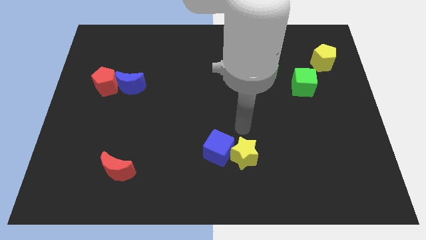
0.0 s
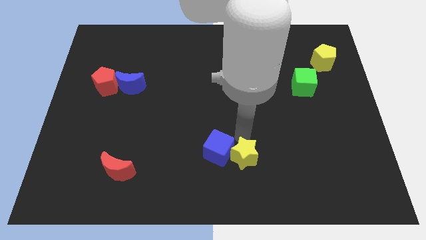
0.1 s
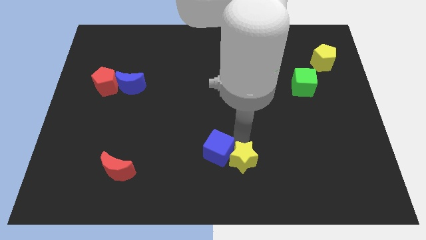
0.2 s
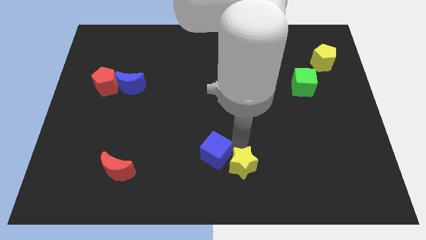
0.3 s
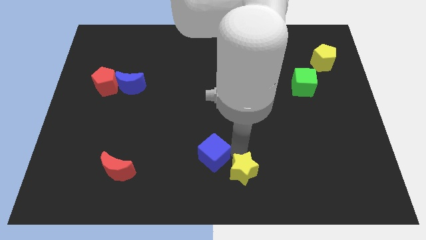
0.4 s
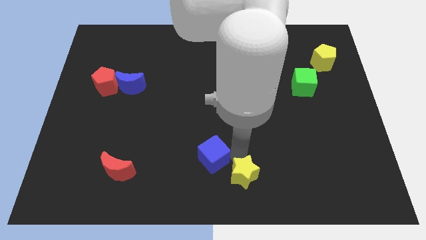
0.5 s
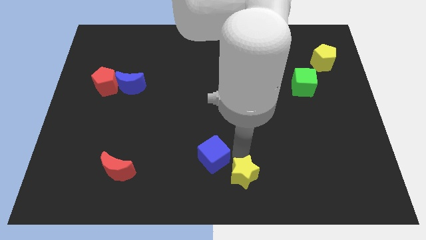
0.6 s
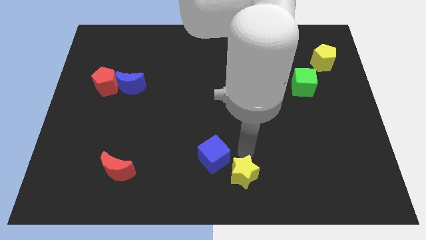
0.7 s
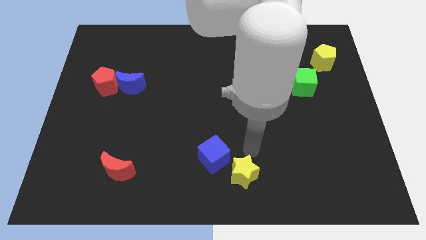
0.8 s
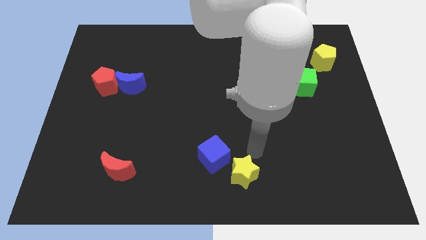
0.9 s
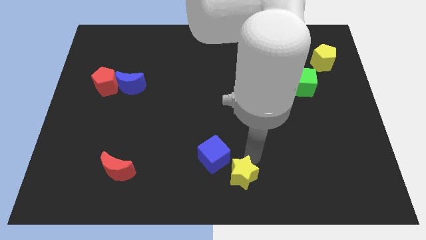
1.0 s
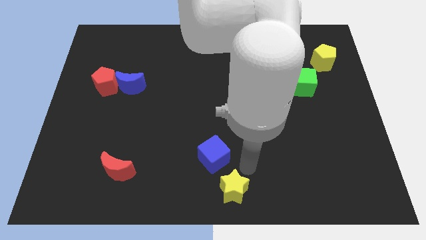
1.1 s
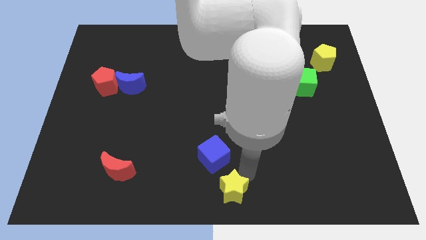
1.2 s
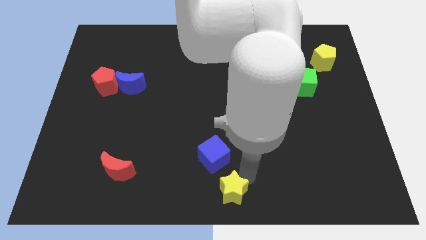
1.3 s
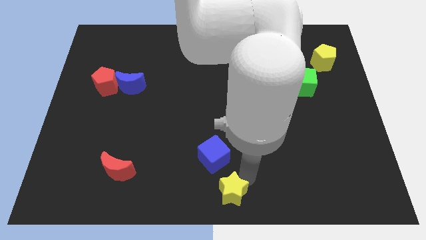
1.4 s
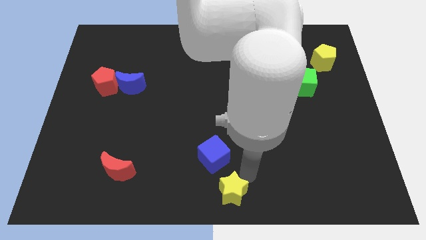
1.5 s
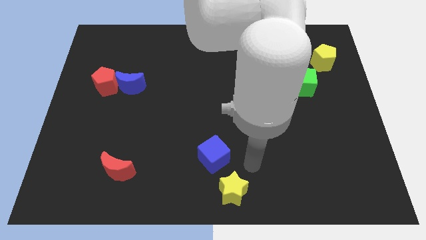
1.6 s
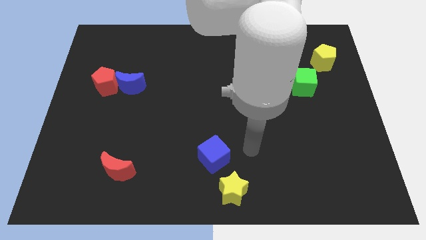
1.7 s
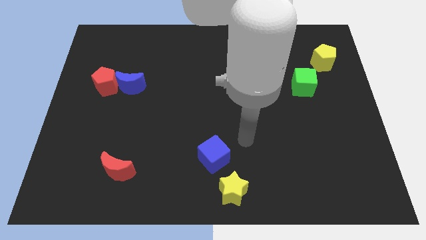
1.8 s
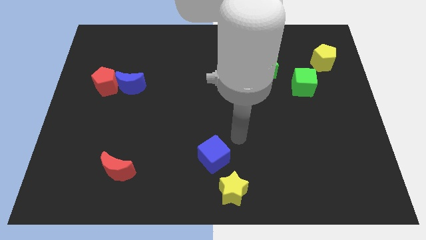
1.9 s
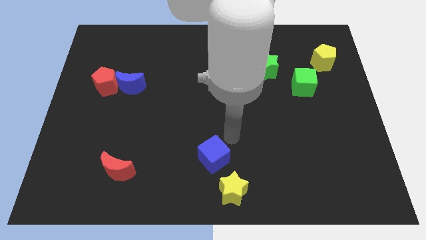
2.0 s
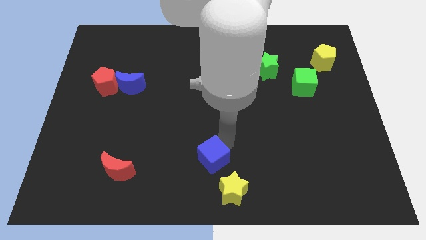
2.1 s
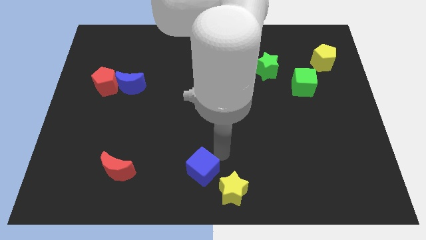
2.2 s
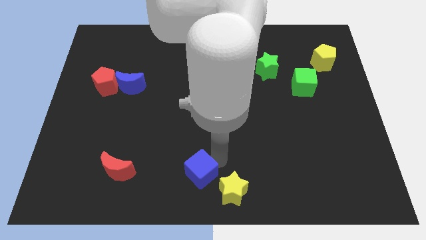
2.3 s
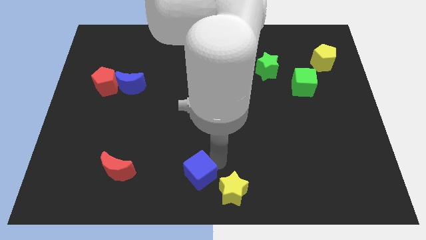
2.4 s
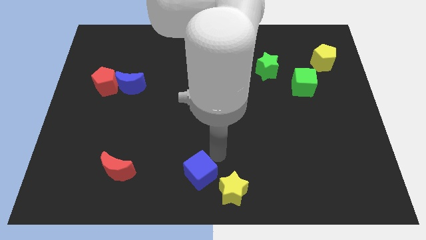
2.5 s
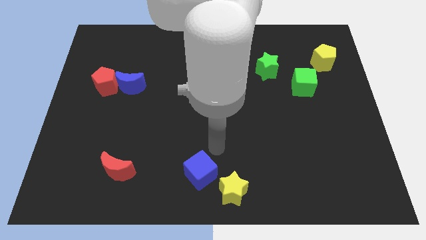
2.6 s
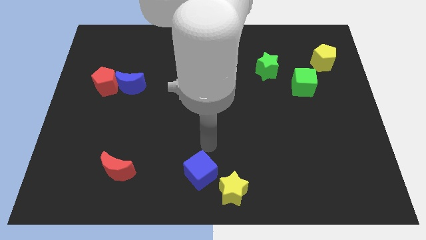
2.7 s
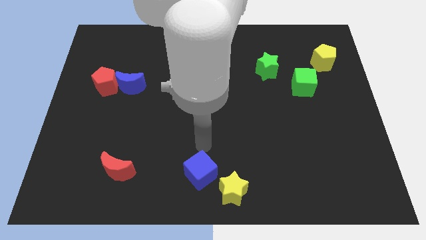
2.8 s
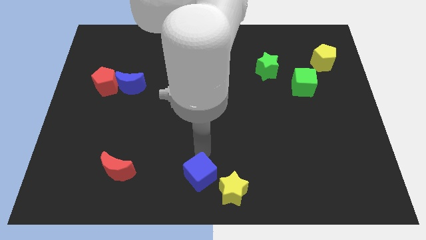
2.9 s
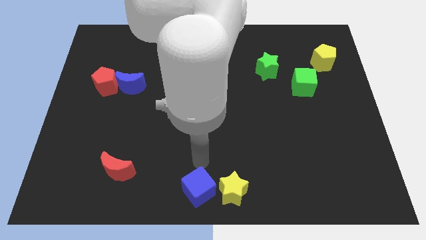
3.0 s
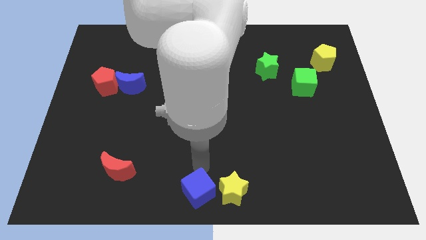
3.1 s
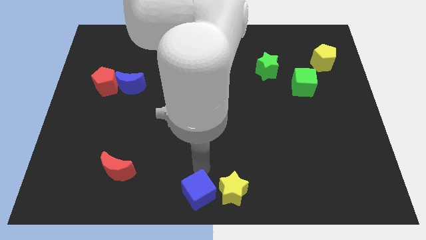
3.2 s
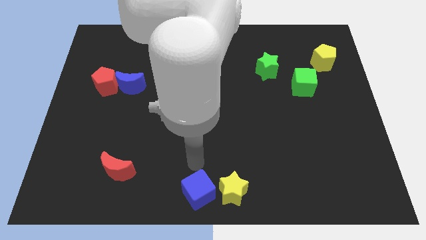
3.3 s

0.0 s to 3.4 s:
place the blue cube and the yellow star at the bottom center

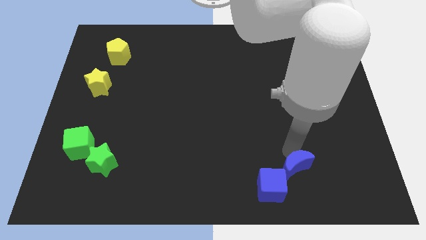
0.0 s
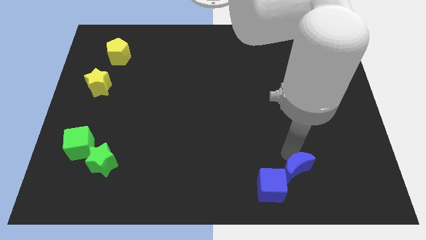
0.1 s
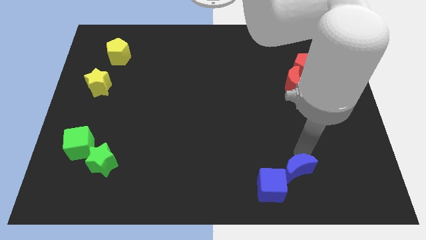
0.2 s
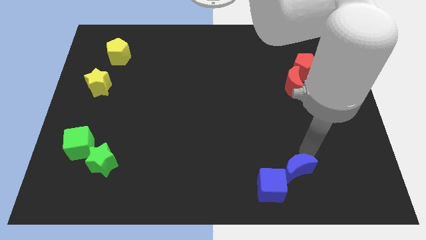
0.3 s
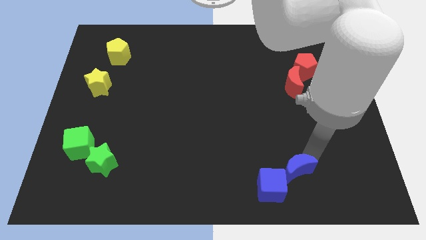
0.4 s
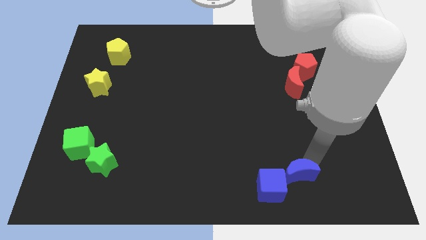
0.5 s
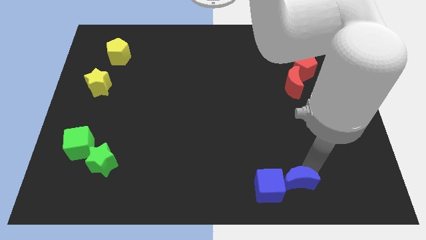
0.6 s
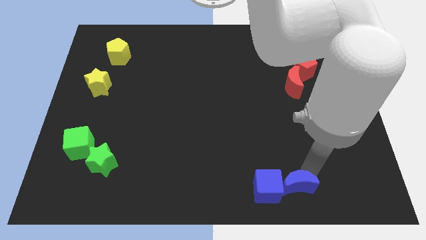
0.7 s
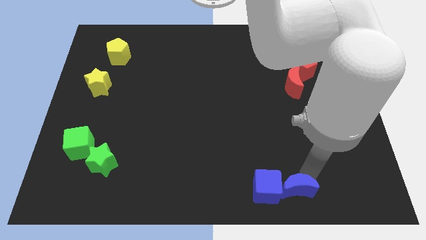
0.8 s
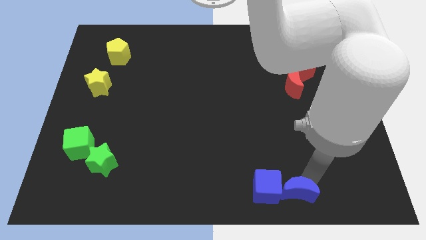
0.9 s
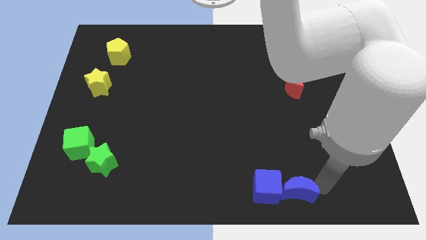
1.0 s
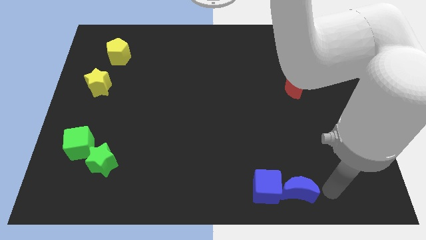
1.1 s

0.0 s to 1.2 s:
place blue moon to the right of blue cube

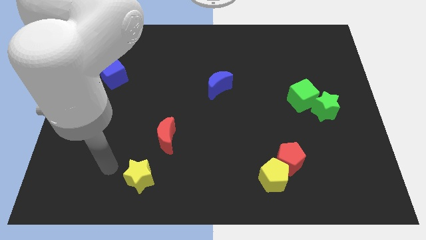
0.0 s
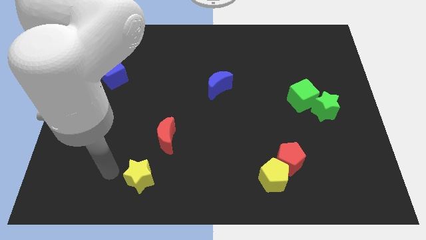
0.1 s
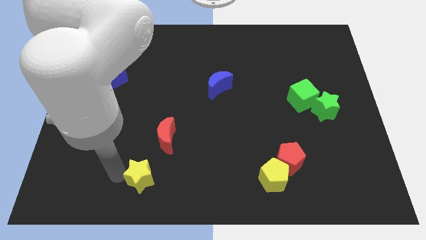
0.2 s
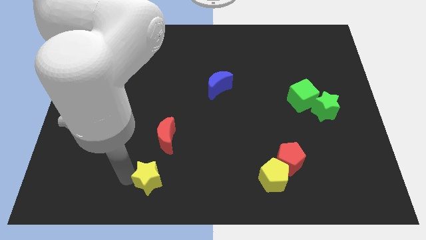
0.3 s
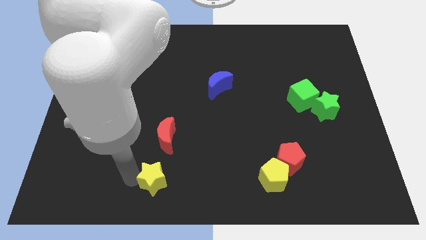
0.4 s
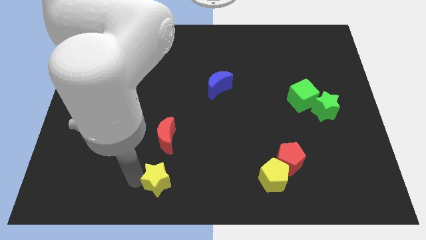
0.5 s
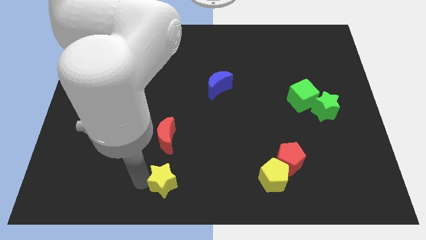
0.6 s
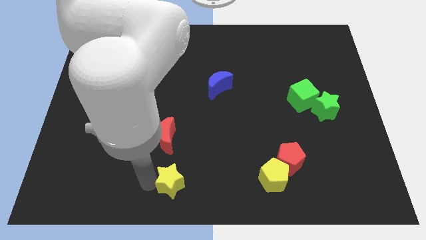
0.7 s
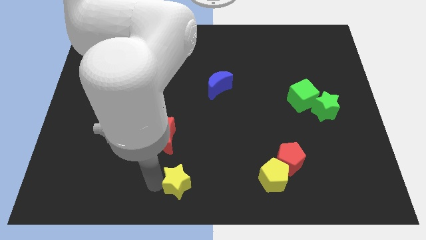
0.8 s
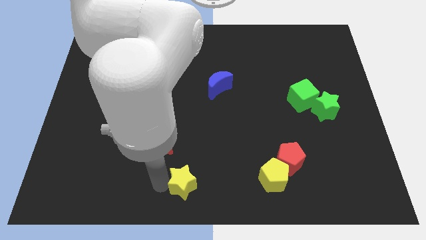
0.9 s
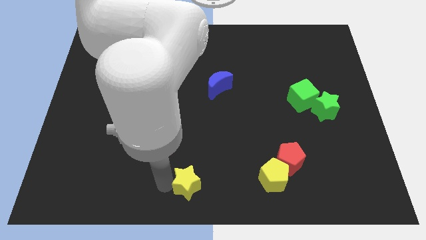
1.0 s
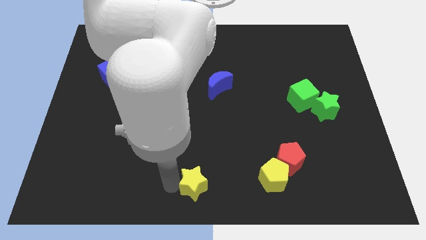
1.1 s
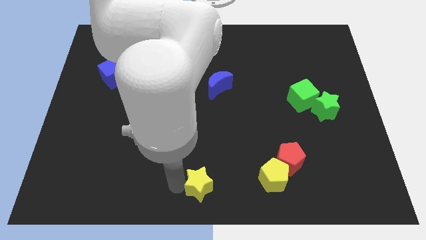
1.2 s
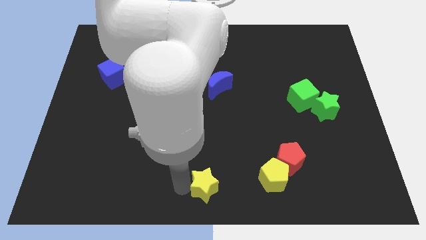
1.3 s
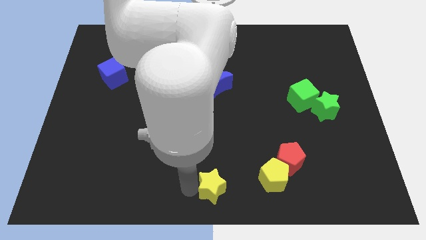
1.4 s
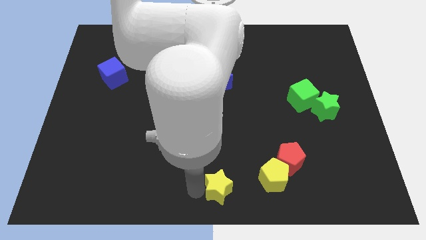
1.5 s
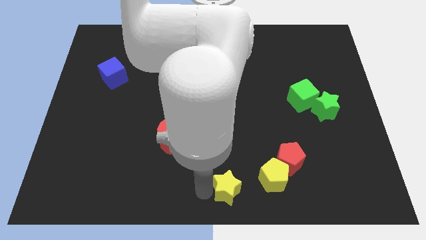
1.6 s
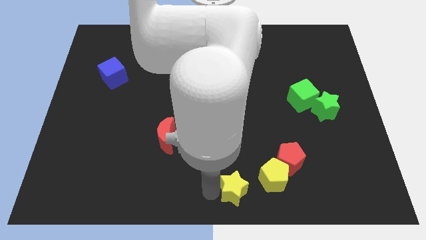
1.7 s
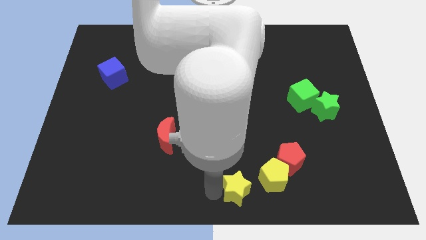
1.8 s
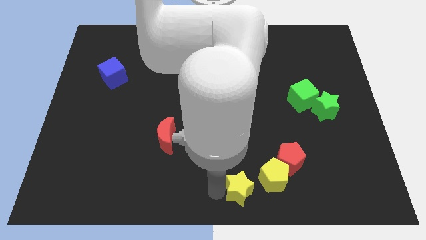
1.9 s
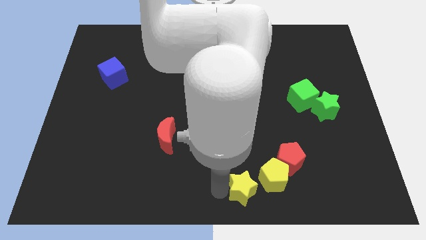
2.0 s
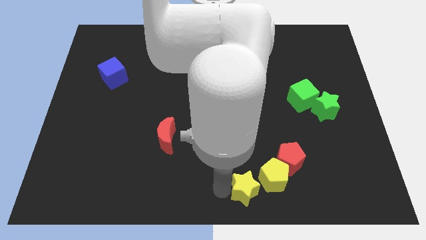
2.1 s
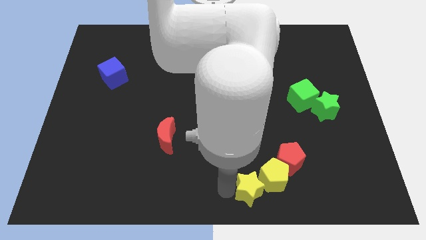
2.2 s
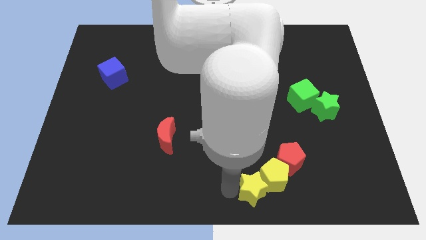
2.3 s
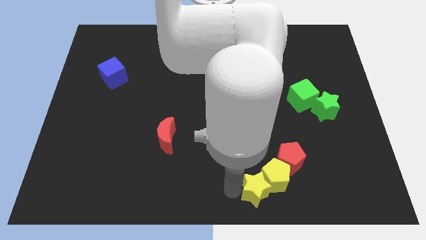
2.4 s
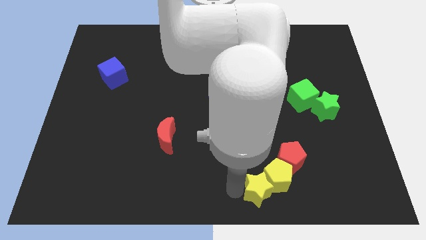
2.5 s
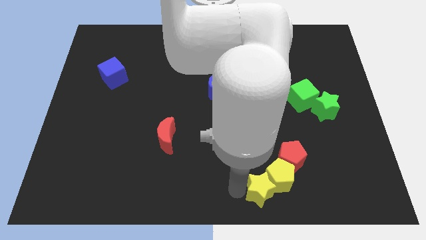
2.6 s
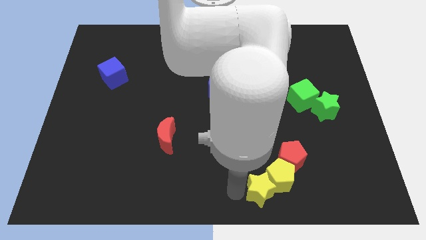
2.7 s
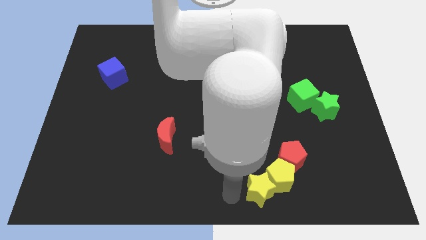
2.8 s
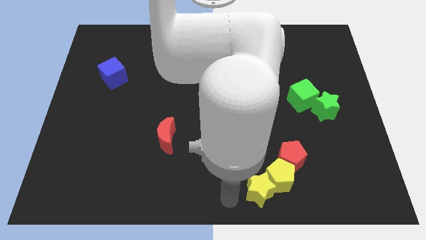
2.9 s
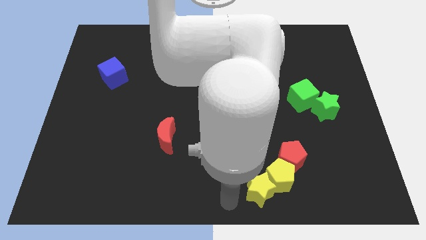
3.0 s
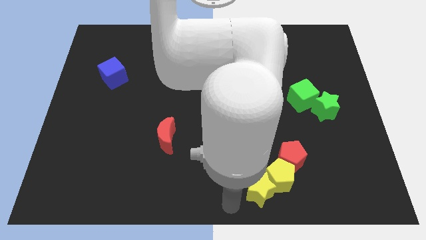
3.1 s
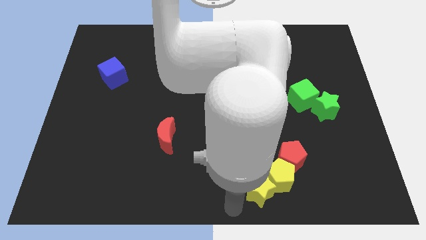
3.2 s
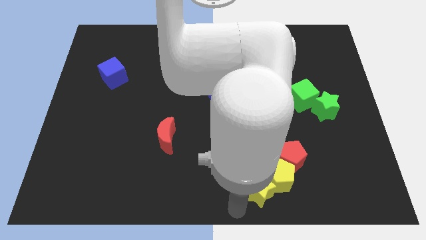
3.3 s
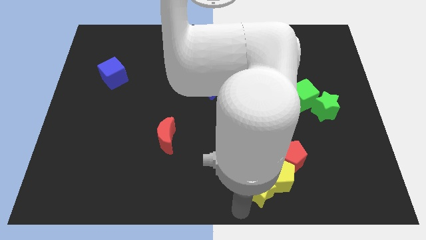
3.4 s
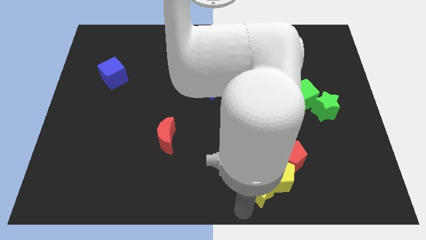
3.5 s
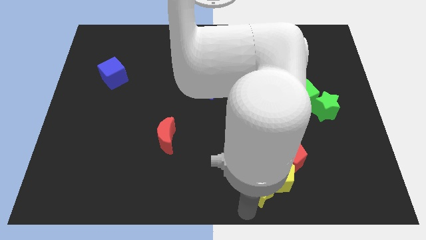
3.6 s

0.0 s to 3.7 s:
place the yellow star to the left side of the yellow pentagon

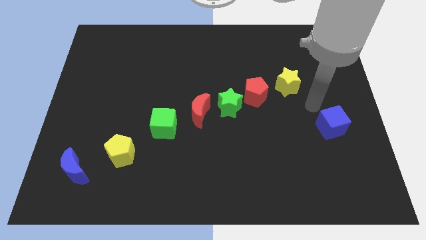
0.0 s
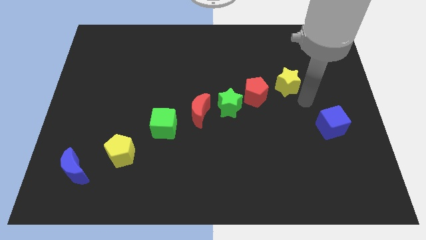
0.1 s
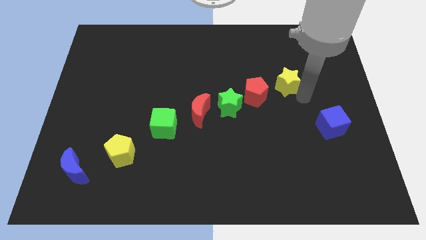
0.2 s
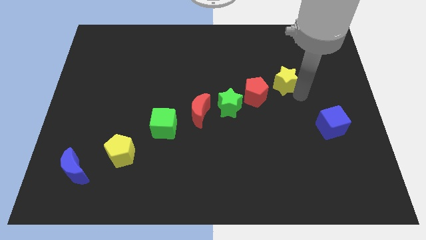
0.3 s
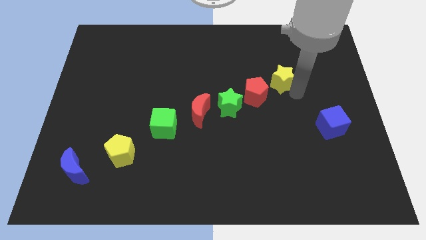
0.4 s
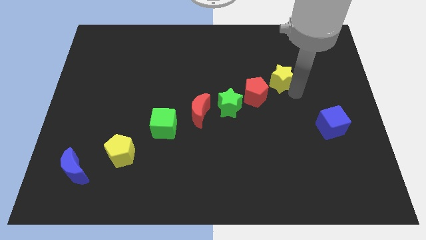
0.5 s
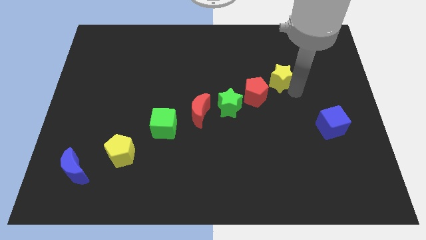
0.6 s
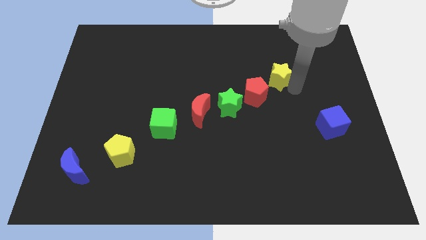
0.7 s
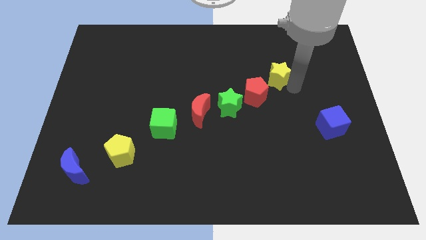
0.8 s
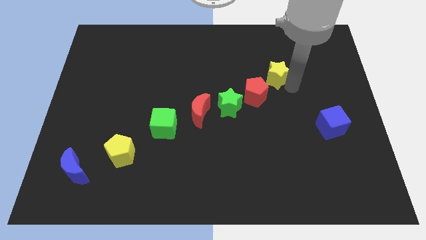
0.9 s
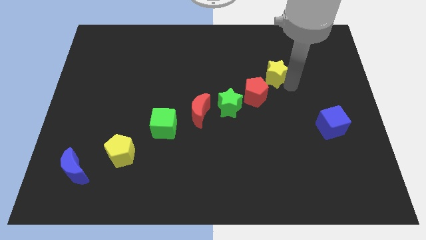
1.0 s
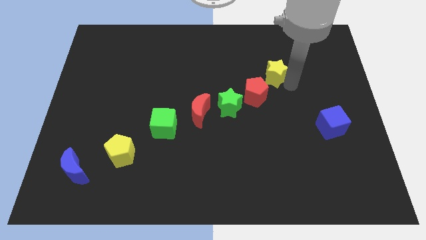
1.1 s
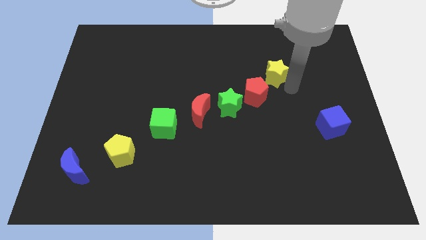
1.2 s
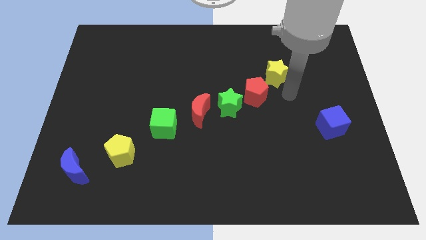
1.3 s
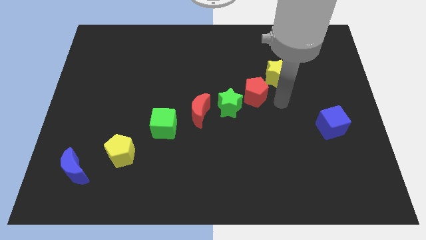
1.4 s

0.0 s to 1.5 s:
move the yellow star slightly upwards
